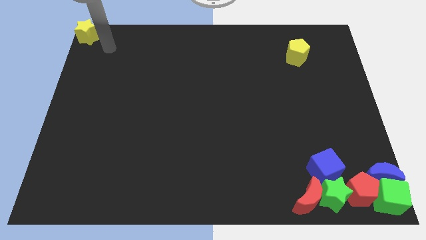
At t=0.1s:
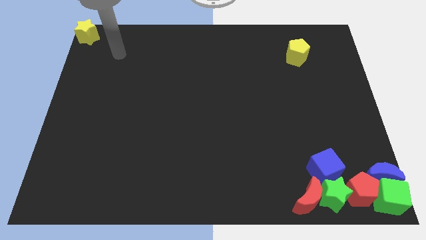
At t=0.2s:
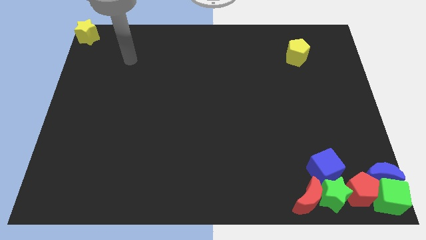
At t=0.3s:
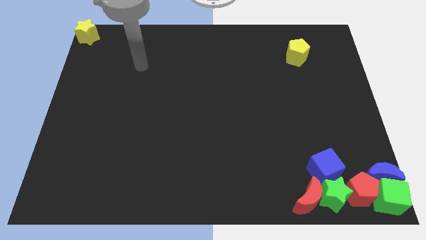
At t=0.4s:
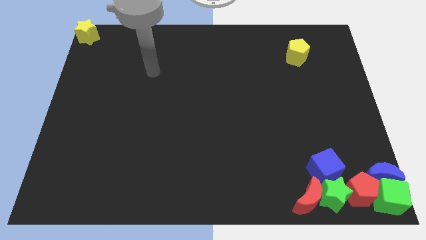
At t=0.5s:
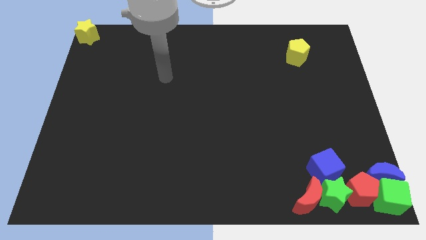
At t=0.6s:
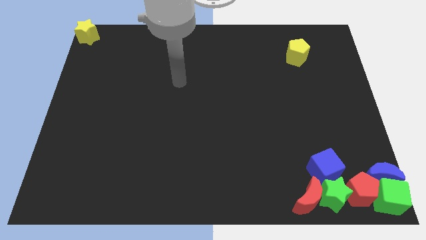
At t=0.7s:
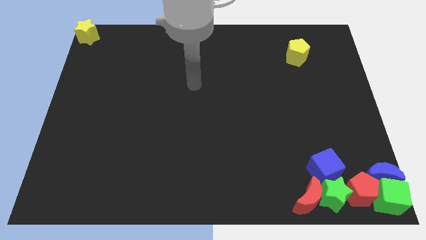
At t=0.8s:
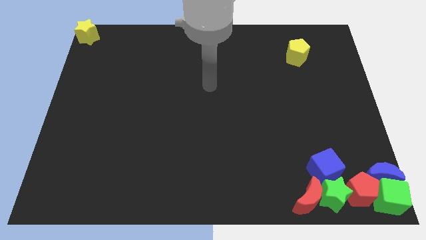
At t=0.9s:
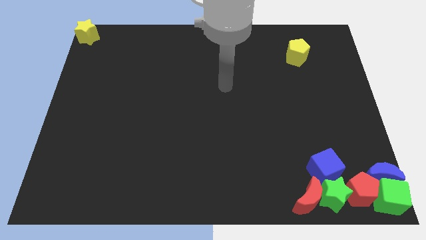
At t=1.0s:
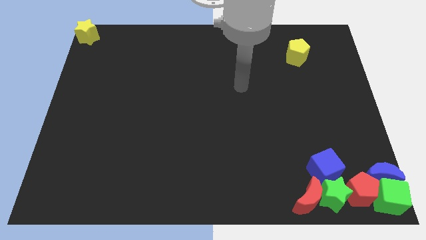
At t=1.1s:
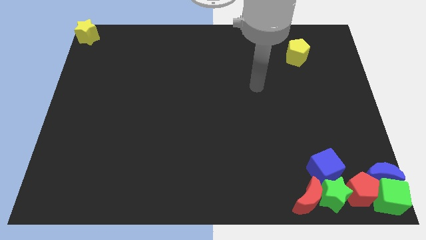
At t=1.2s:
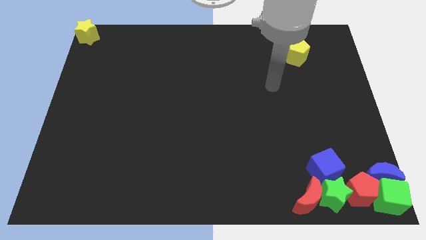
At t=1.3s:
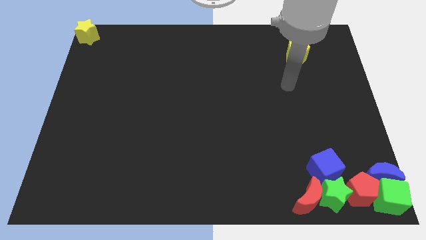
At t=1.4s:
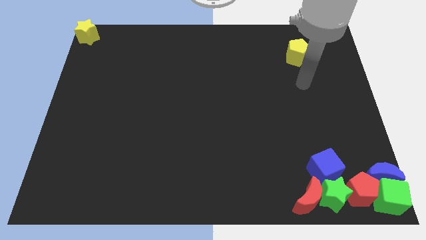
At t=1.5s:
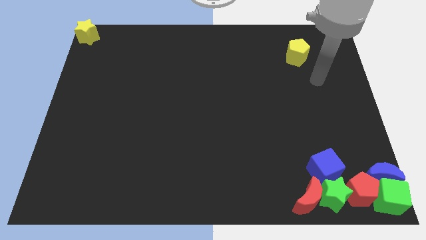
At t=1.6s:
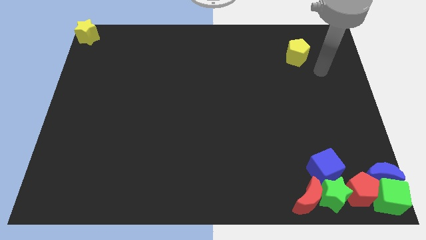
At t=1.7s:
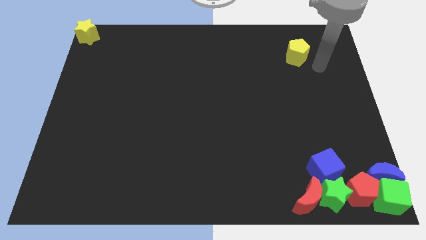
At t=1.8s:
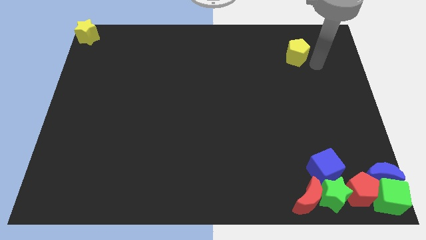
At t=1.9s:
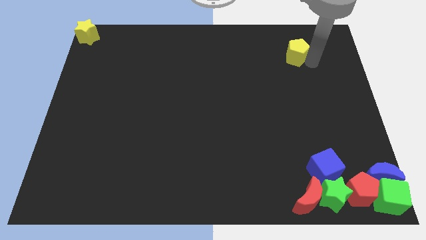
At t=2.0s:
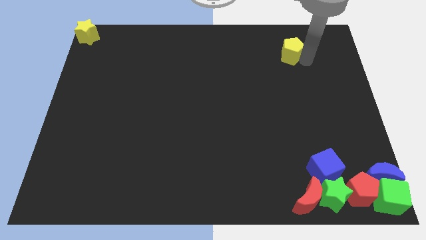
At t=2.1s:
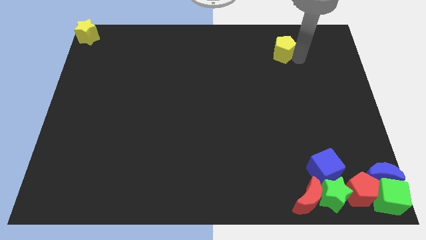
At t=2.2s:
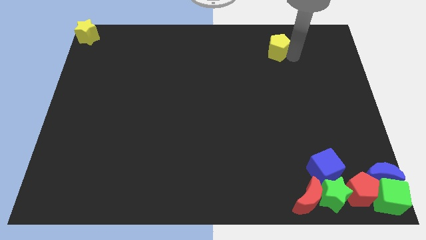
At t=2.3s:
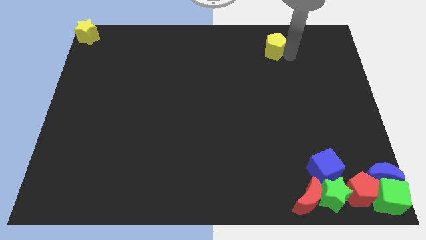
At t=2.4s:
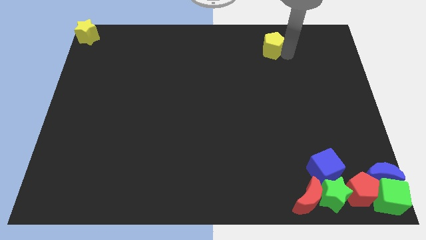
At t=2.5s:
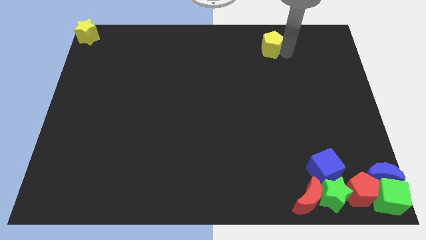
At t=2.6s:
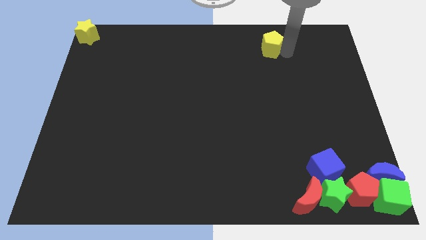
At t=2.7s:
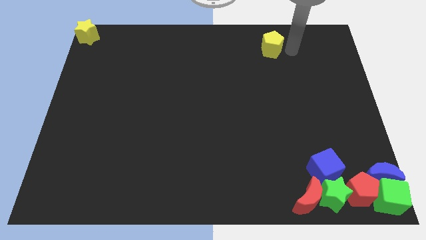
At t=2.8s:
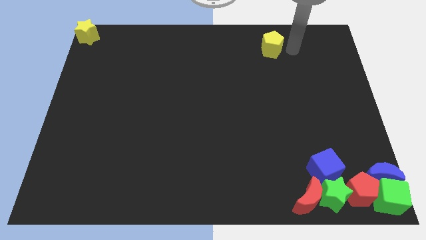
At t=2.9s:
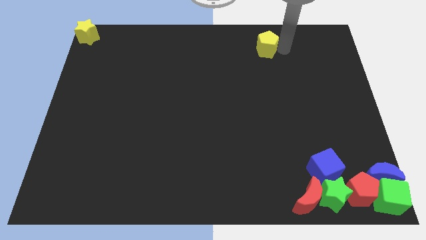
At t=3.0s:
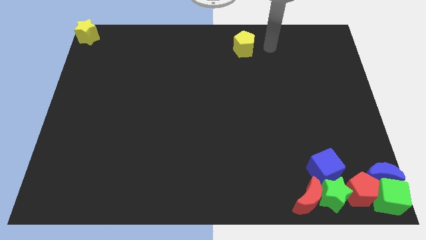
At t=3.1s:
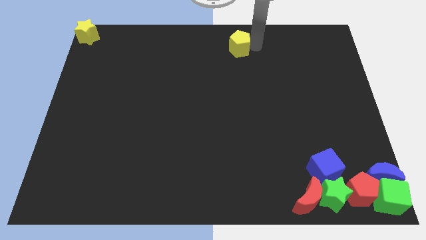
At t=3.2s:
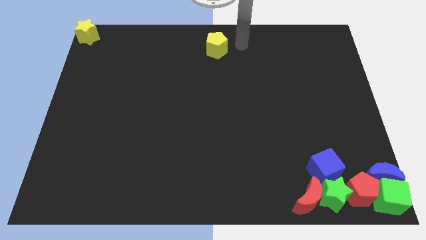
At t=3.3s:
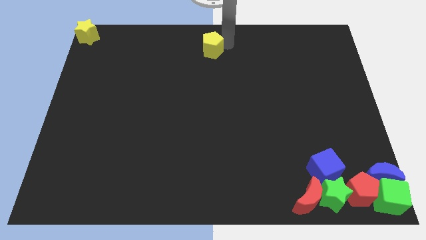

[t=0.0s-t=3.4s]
push the yellow pentagon to the top center

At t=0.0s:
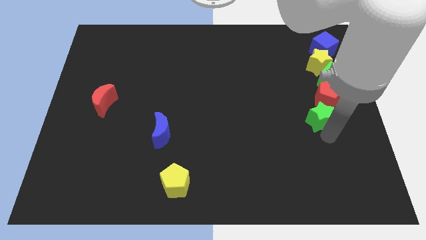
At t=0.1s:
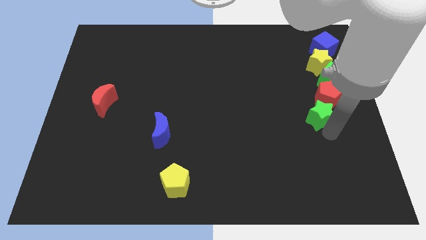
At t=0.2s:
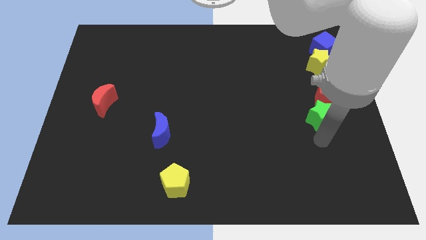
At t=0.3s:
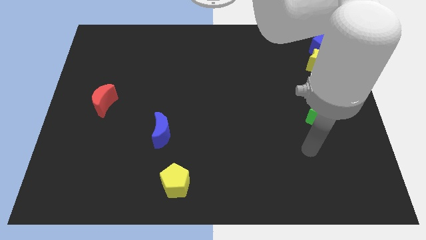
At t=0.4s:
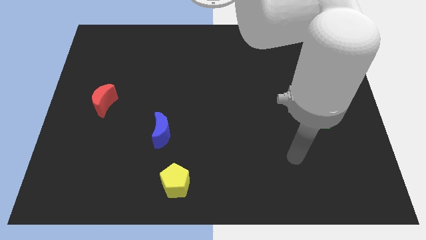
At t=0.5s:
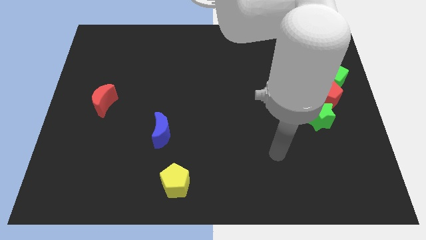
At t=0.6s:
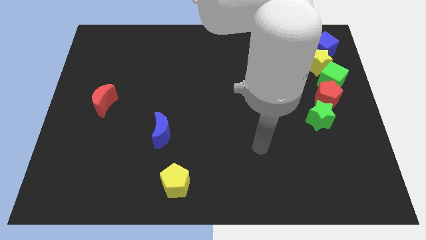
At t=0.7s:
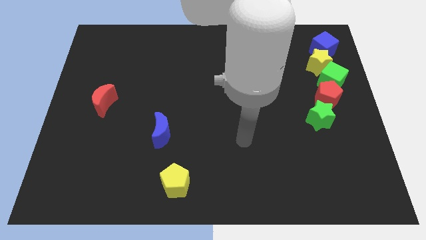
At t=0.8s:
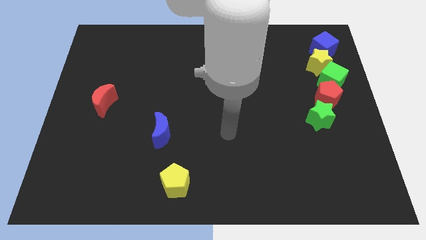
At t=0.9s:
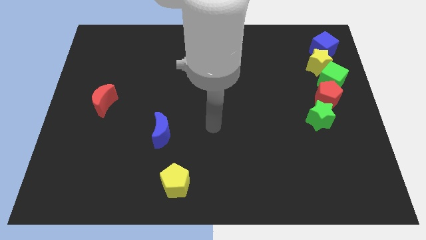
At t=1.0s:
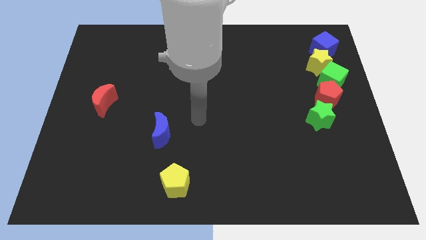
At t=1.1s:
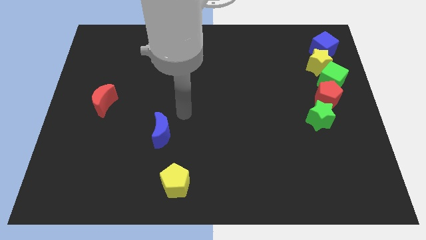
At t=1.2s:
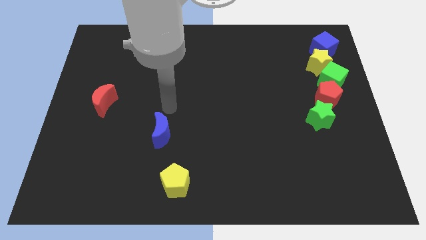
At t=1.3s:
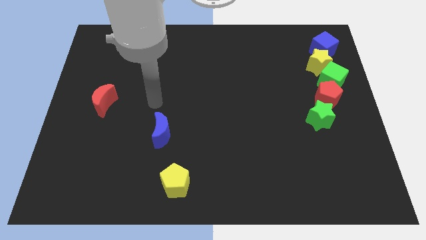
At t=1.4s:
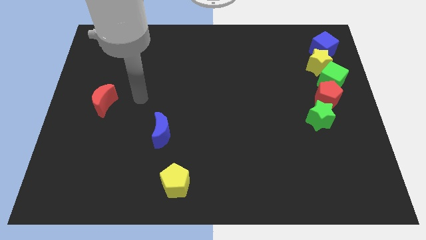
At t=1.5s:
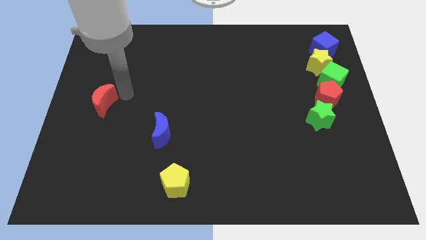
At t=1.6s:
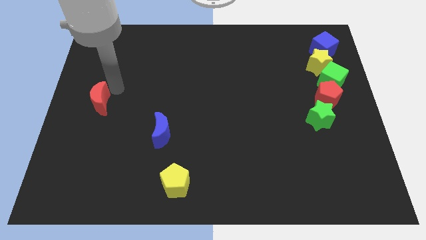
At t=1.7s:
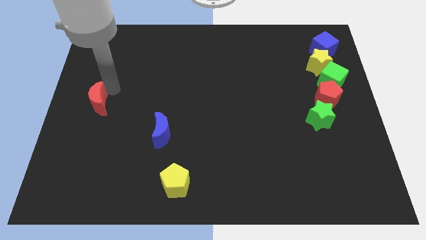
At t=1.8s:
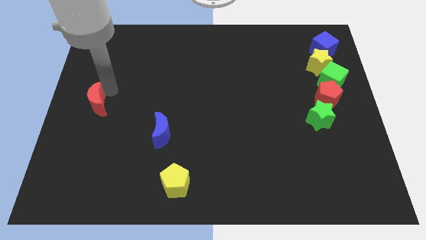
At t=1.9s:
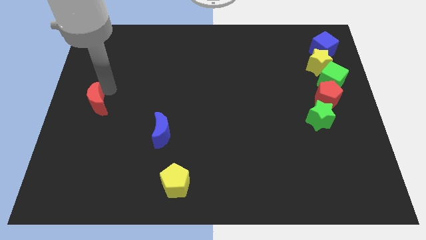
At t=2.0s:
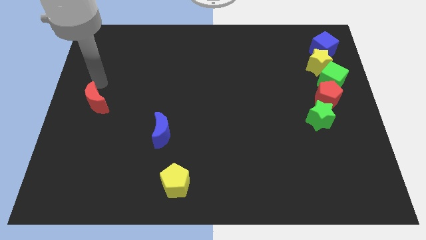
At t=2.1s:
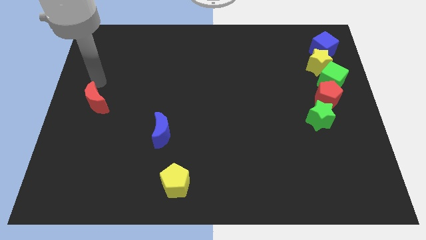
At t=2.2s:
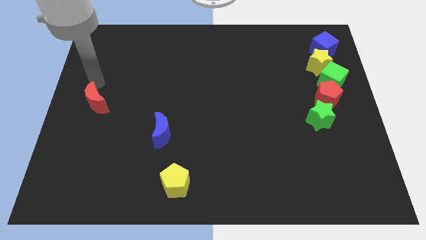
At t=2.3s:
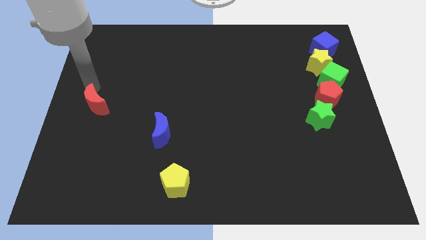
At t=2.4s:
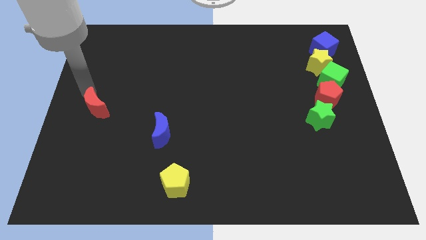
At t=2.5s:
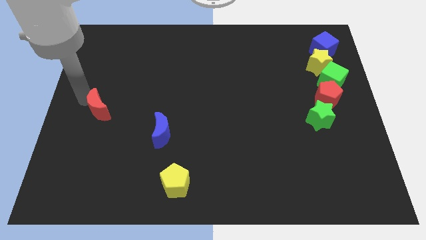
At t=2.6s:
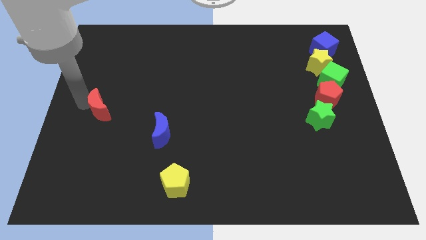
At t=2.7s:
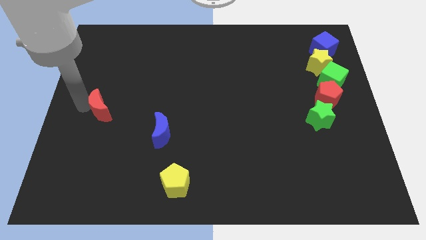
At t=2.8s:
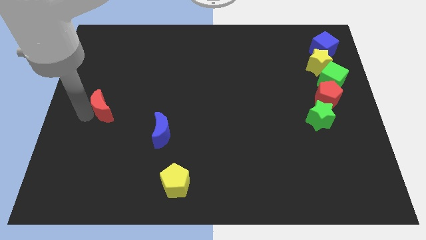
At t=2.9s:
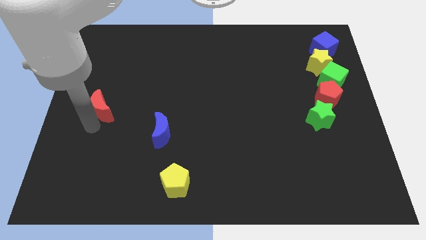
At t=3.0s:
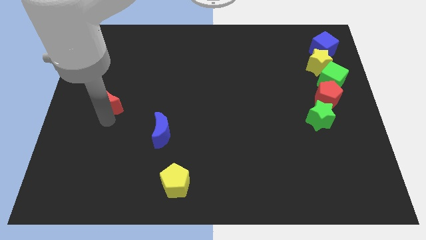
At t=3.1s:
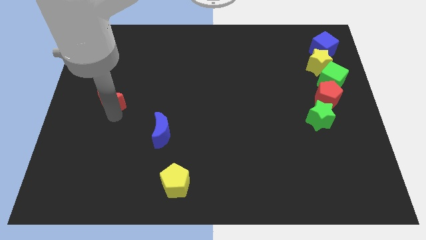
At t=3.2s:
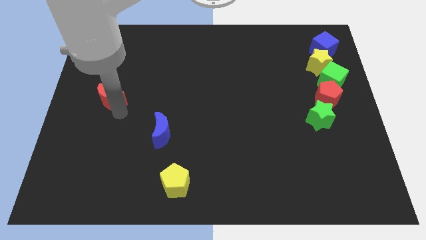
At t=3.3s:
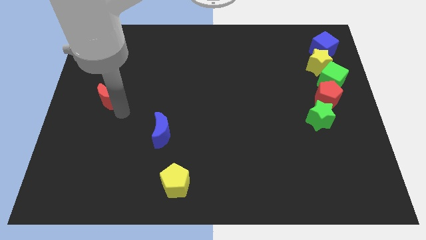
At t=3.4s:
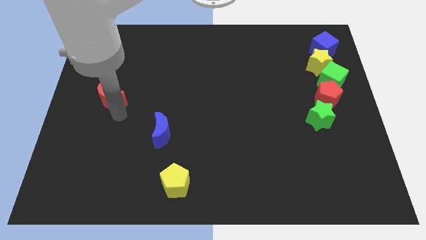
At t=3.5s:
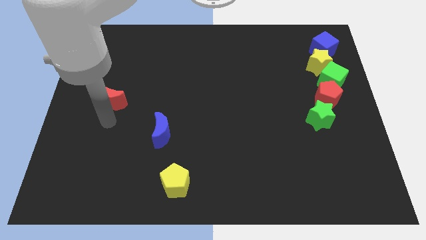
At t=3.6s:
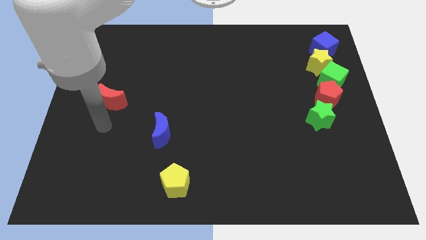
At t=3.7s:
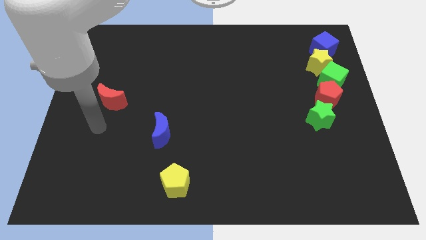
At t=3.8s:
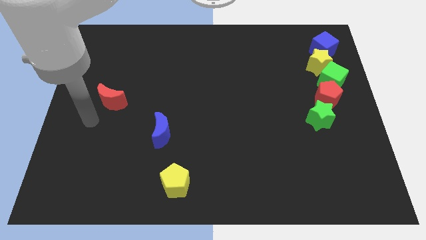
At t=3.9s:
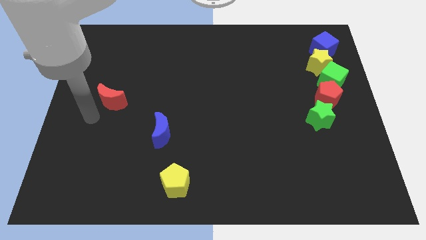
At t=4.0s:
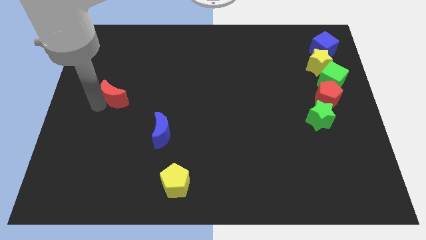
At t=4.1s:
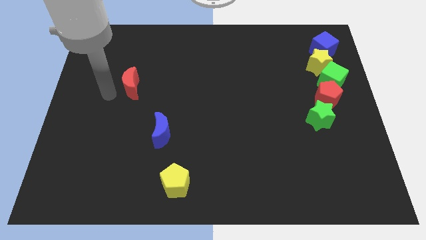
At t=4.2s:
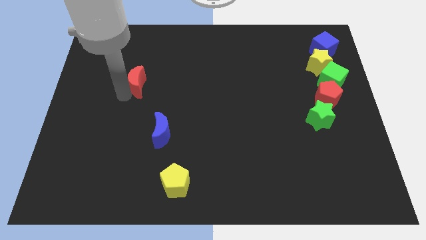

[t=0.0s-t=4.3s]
place the red moon at the top left of the blue moon

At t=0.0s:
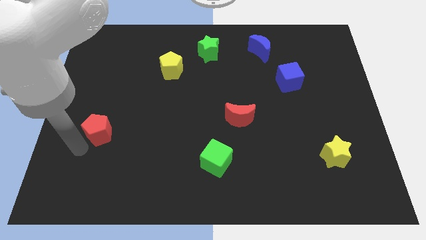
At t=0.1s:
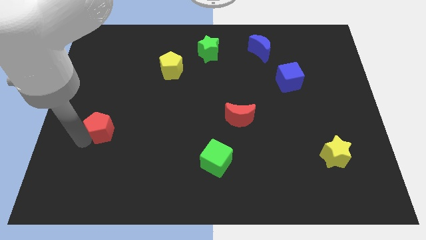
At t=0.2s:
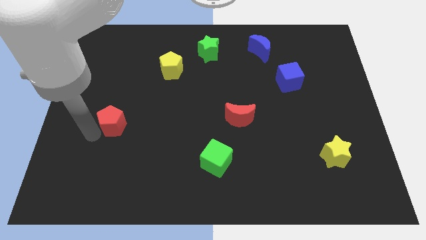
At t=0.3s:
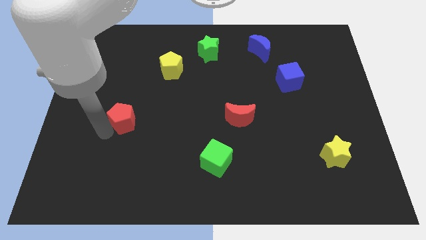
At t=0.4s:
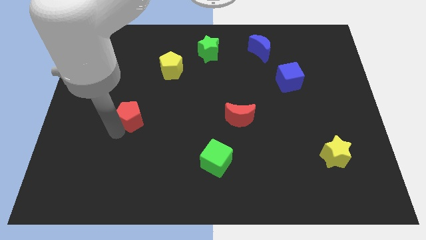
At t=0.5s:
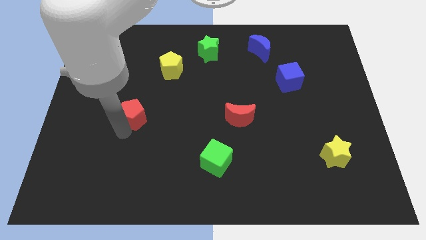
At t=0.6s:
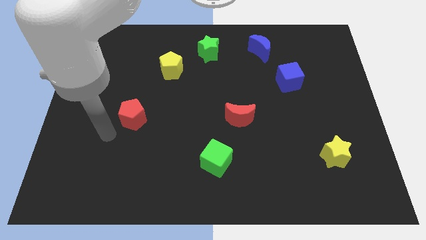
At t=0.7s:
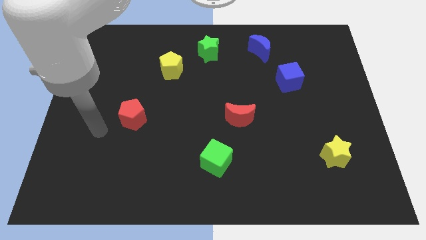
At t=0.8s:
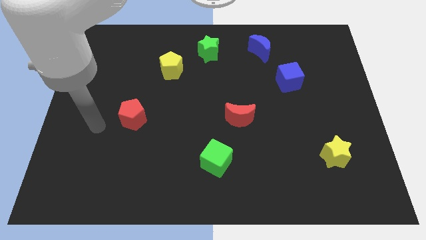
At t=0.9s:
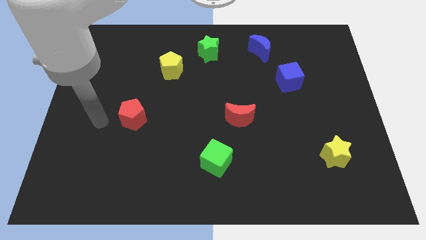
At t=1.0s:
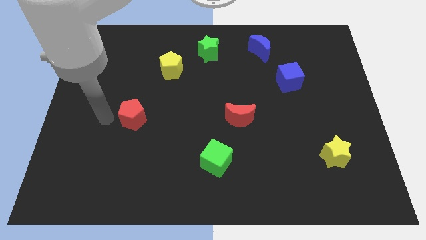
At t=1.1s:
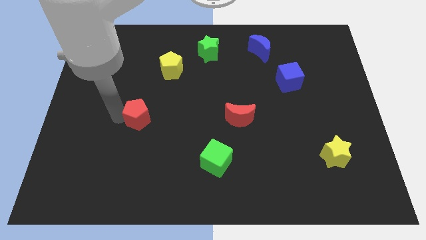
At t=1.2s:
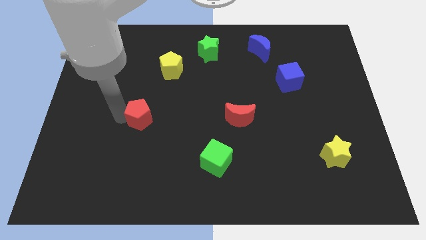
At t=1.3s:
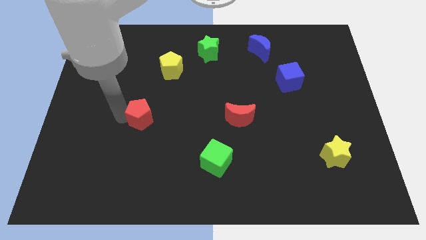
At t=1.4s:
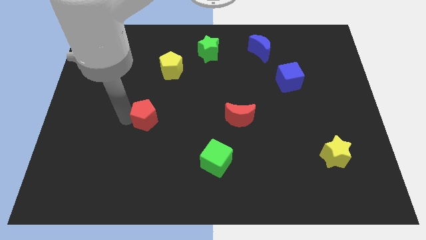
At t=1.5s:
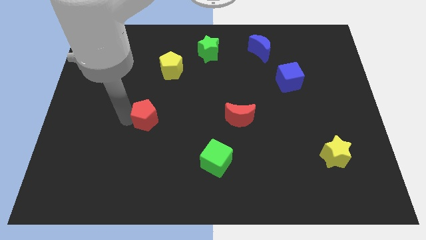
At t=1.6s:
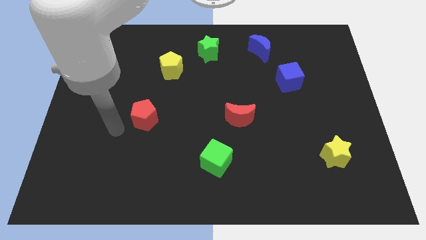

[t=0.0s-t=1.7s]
push the red pentagon towards the center of the board
